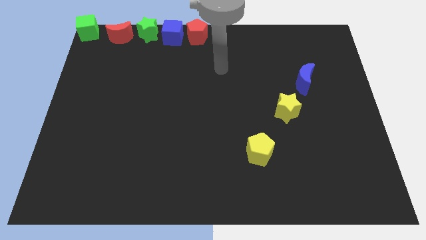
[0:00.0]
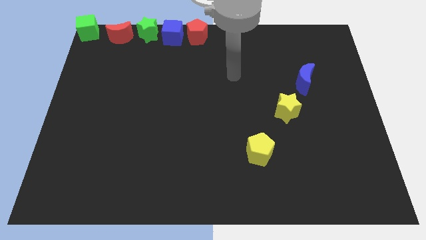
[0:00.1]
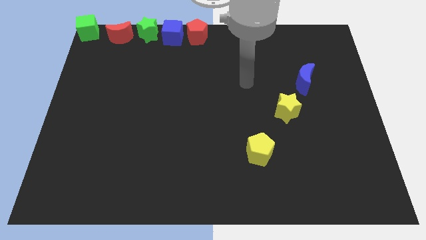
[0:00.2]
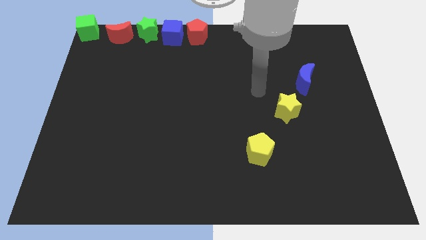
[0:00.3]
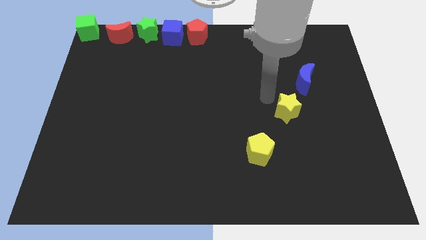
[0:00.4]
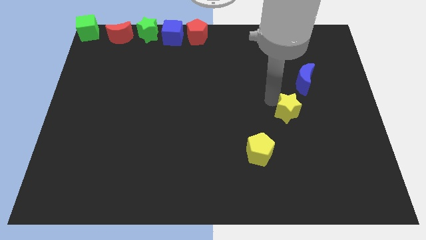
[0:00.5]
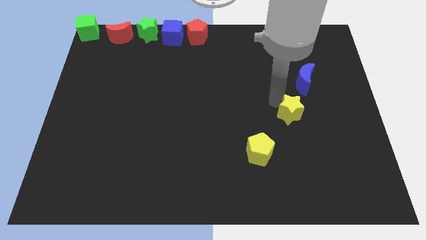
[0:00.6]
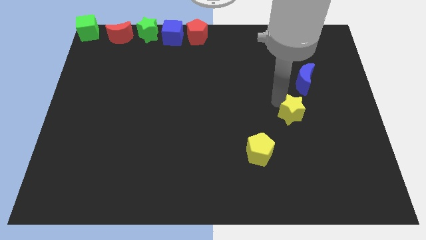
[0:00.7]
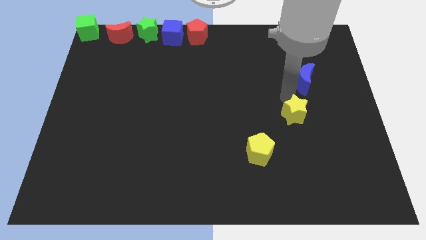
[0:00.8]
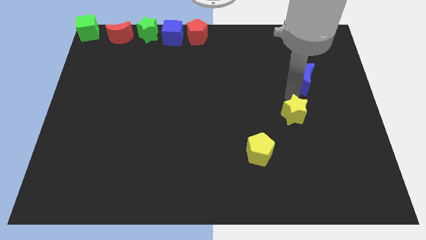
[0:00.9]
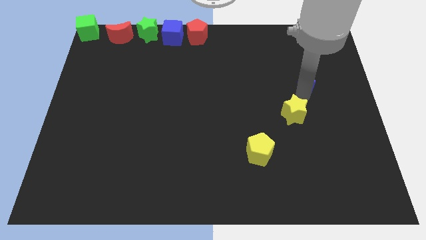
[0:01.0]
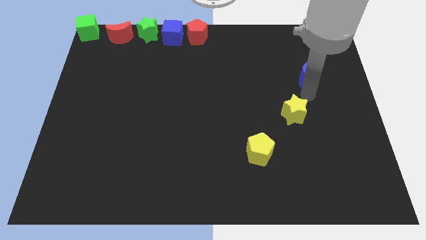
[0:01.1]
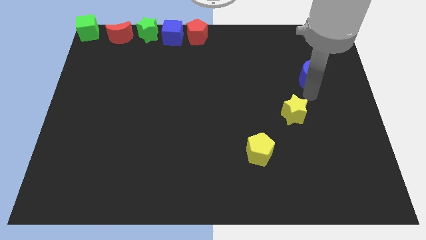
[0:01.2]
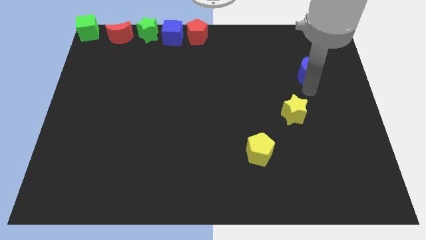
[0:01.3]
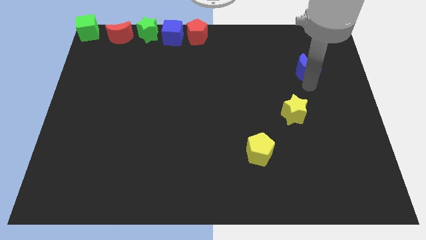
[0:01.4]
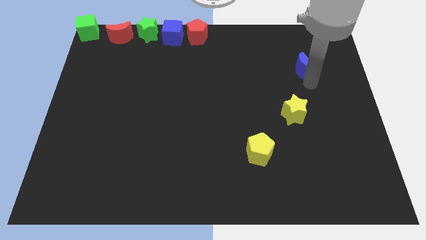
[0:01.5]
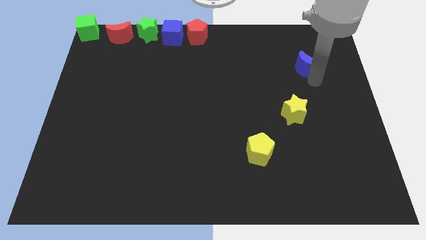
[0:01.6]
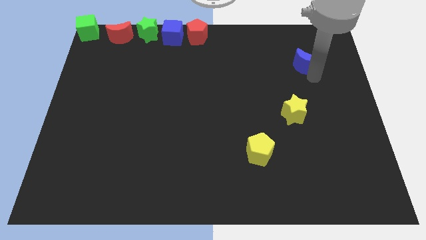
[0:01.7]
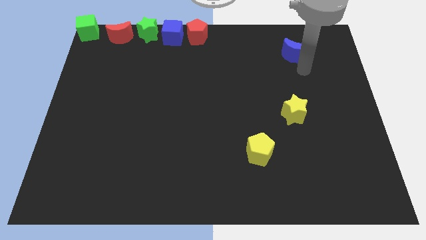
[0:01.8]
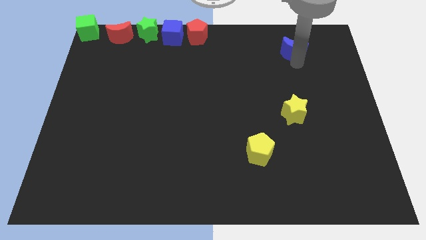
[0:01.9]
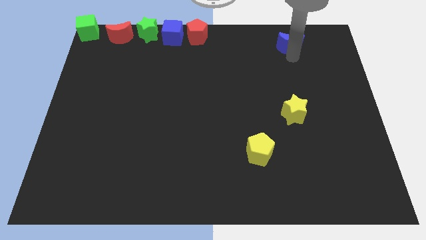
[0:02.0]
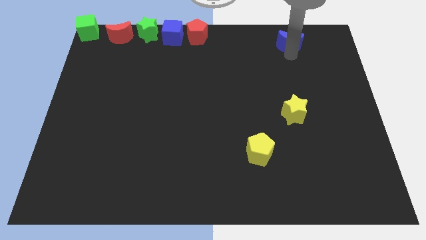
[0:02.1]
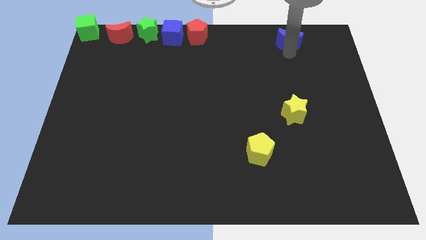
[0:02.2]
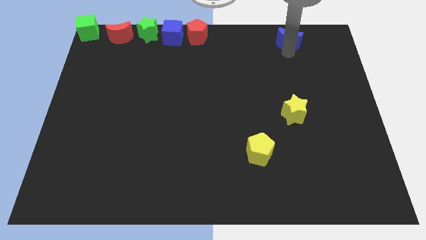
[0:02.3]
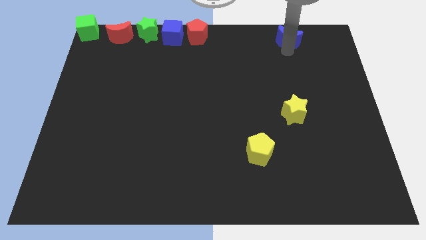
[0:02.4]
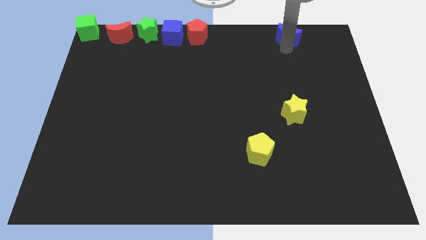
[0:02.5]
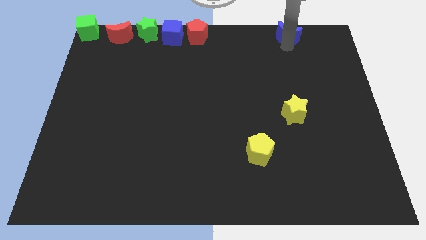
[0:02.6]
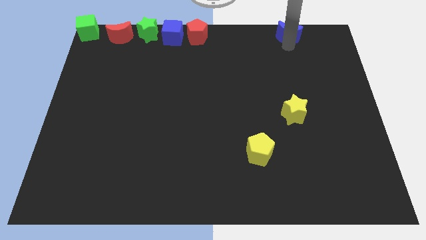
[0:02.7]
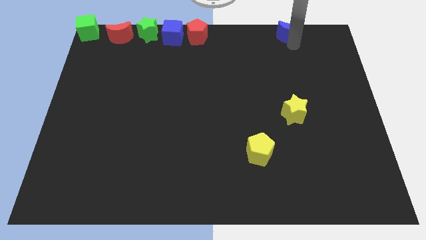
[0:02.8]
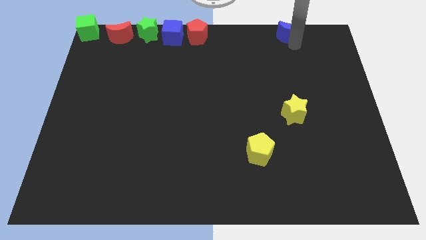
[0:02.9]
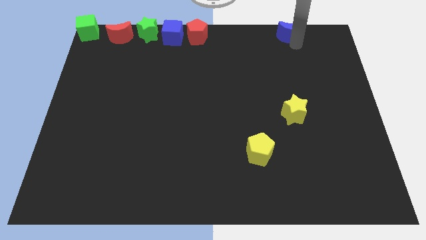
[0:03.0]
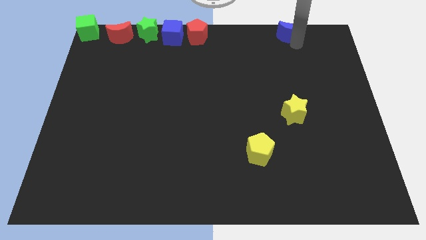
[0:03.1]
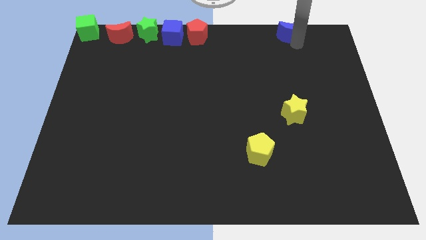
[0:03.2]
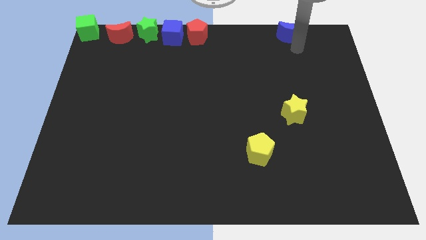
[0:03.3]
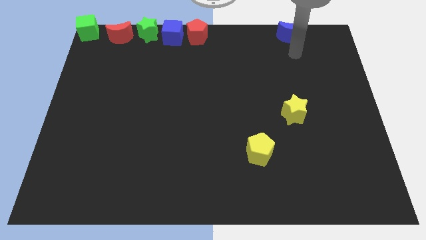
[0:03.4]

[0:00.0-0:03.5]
push the blue crescent to the top

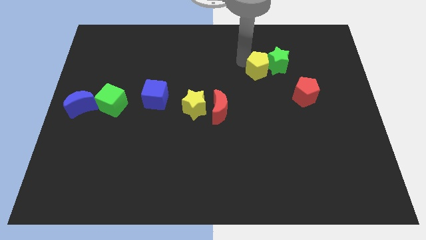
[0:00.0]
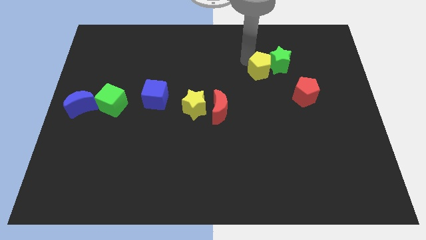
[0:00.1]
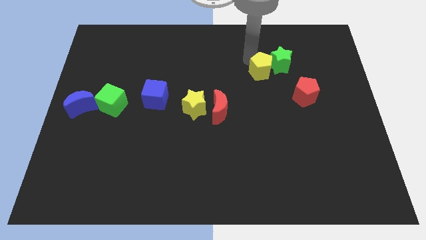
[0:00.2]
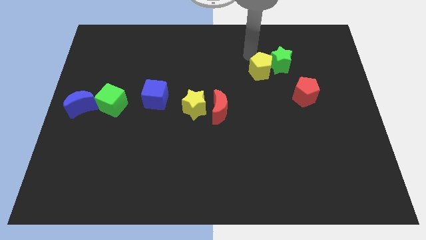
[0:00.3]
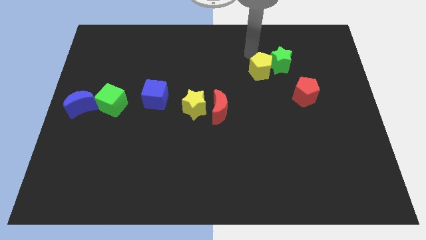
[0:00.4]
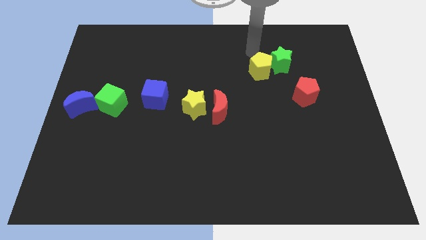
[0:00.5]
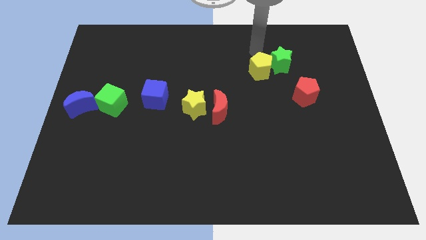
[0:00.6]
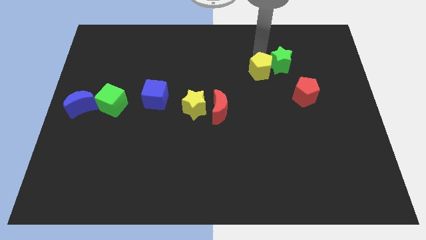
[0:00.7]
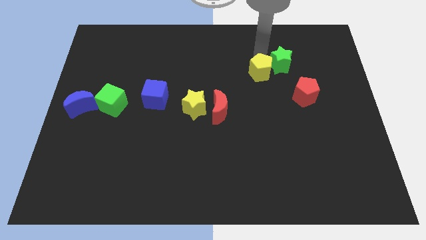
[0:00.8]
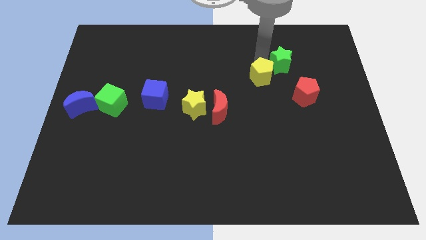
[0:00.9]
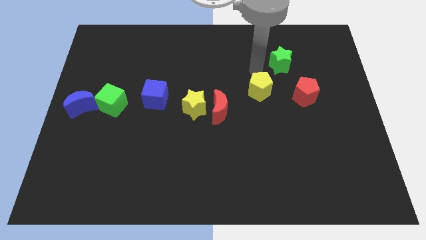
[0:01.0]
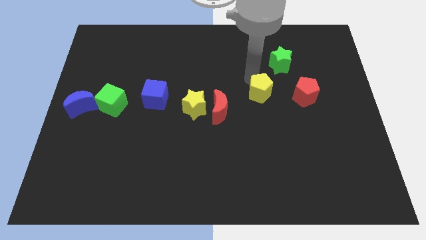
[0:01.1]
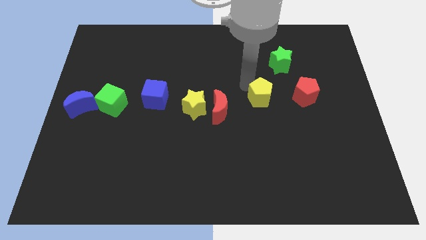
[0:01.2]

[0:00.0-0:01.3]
put the yellow pentagon to the left of the red pentagon

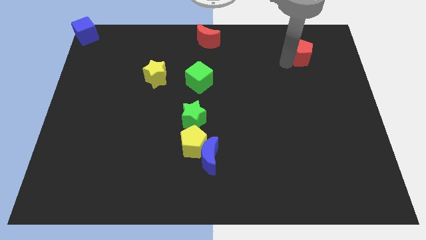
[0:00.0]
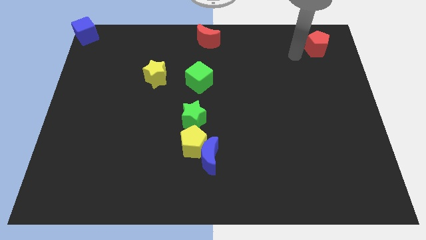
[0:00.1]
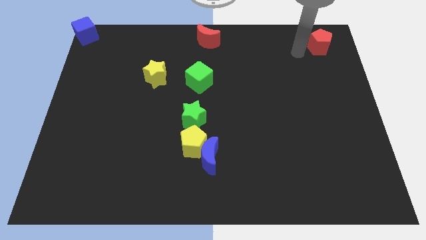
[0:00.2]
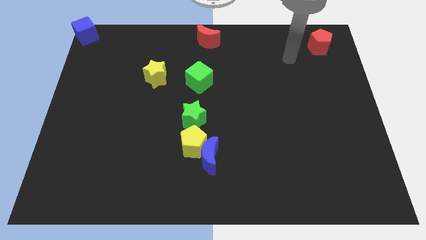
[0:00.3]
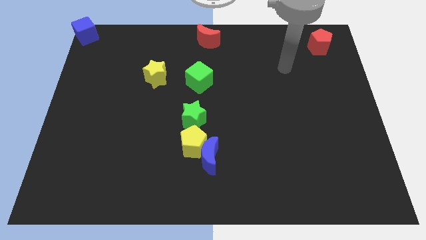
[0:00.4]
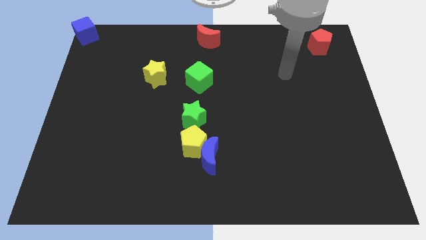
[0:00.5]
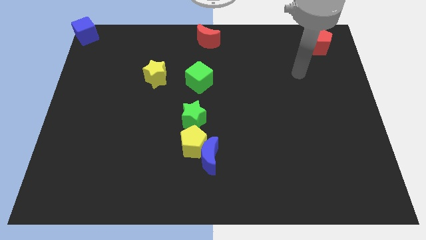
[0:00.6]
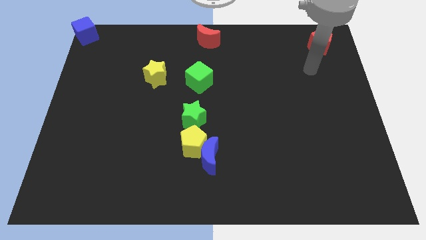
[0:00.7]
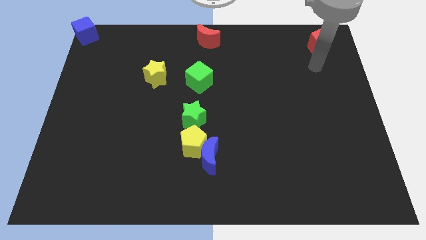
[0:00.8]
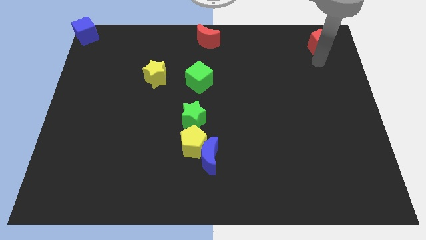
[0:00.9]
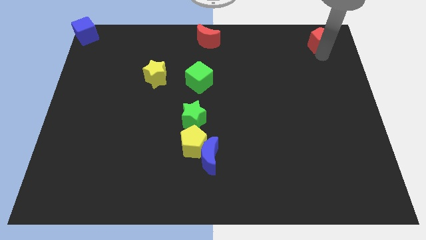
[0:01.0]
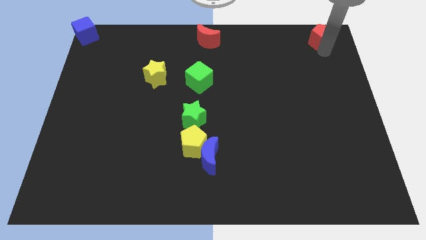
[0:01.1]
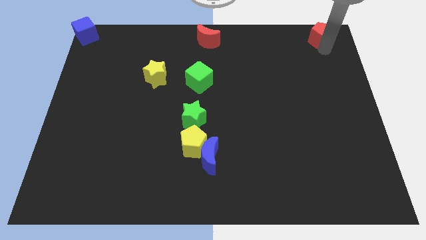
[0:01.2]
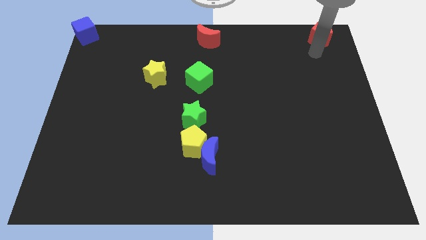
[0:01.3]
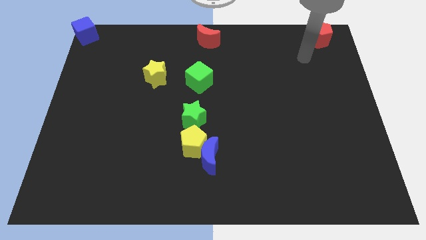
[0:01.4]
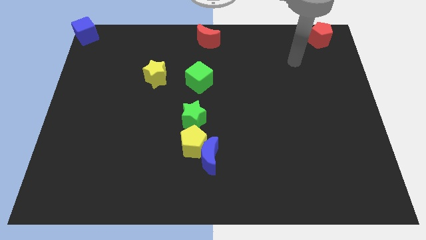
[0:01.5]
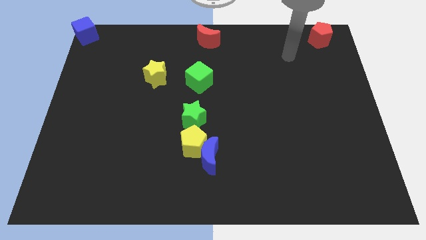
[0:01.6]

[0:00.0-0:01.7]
place the red pentagon at the top right side of the board

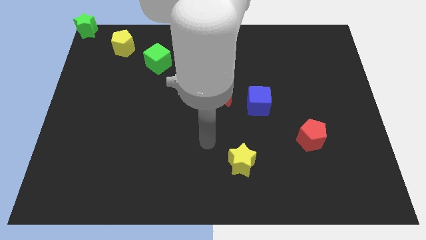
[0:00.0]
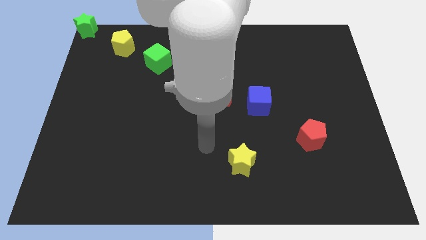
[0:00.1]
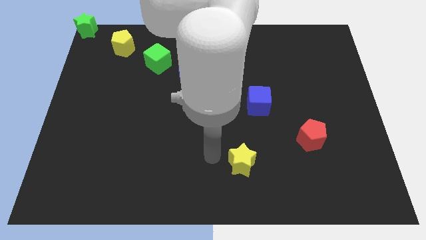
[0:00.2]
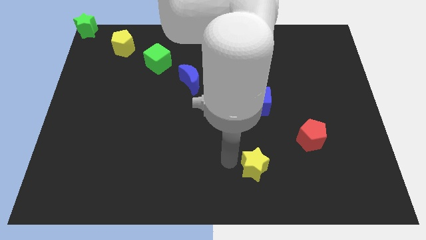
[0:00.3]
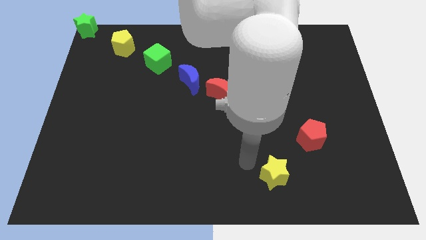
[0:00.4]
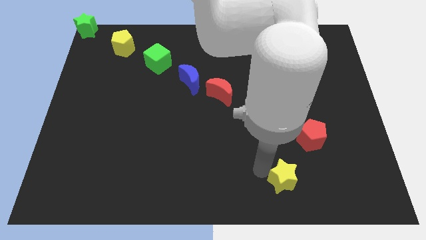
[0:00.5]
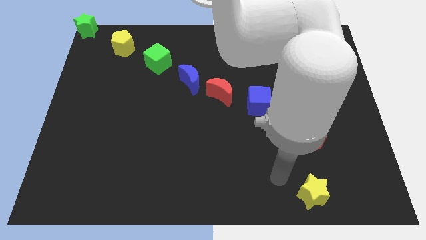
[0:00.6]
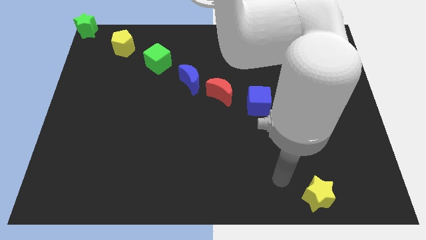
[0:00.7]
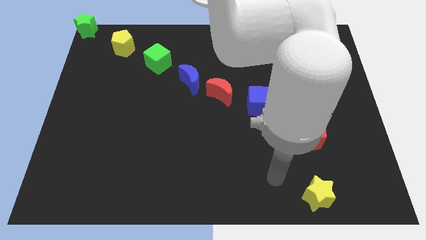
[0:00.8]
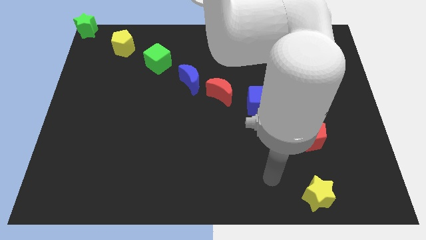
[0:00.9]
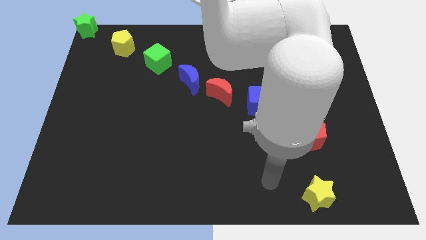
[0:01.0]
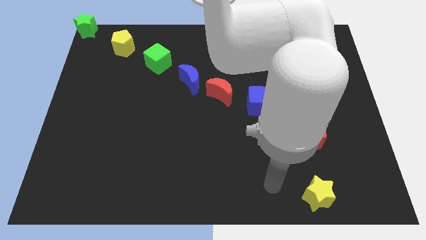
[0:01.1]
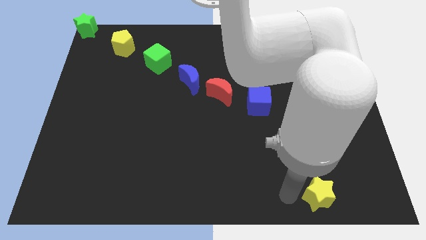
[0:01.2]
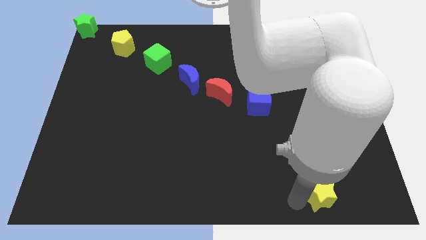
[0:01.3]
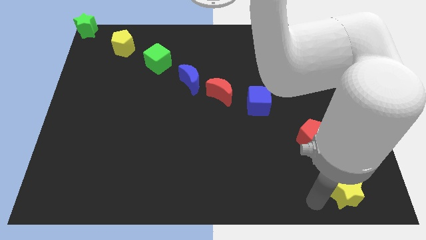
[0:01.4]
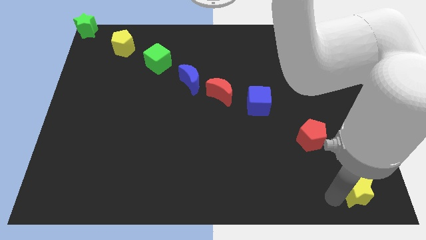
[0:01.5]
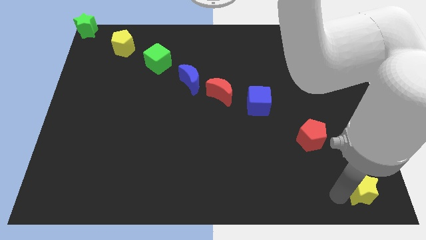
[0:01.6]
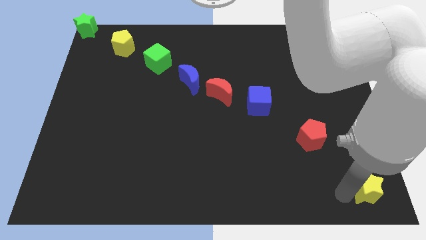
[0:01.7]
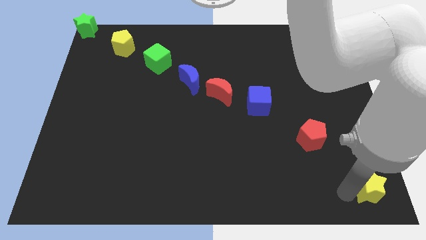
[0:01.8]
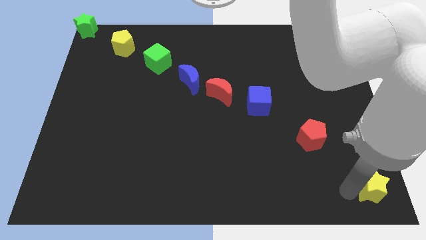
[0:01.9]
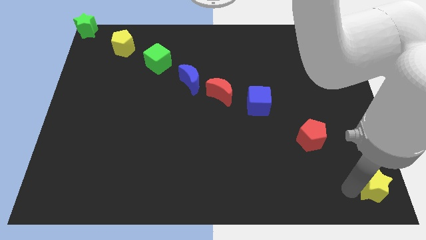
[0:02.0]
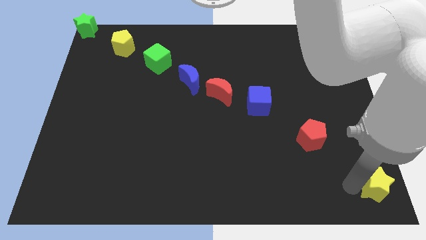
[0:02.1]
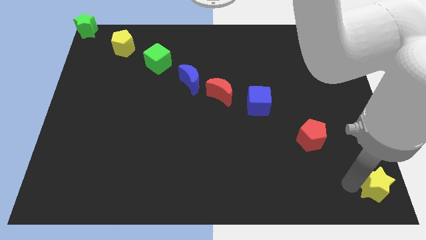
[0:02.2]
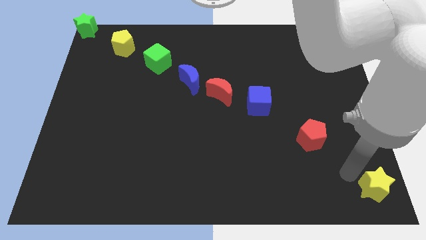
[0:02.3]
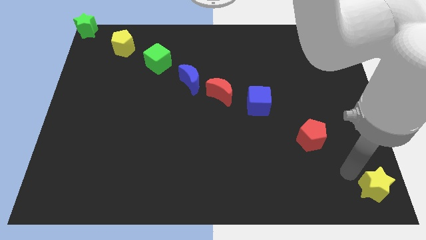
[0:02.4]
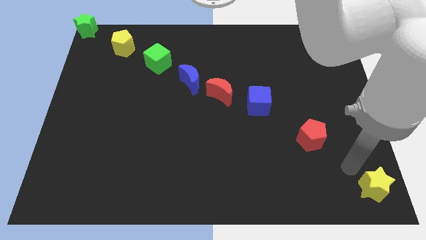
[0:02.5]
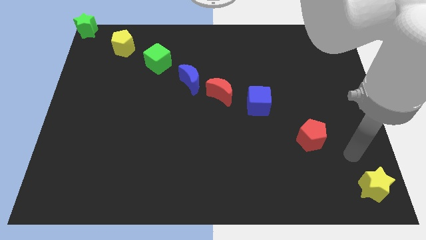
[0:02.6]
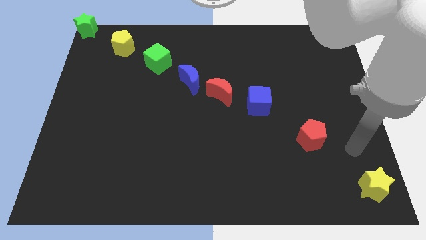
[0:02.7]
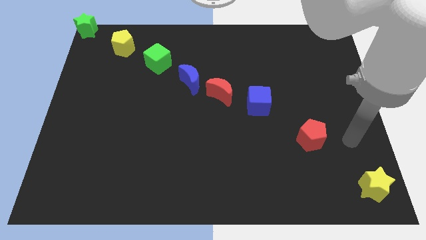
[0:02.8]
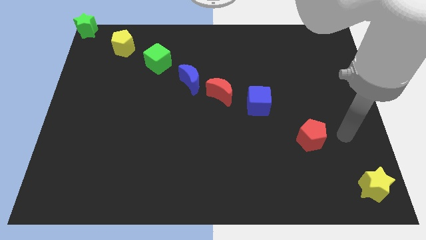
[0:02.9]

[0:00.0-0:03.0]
place yellow star to the bottom right
